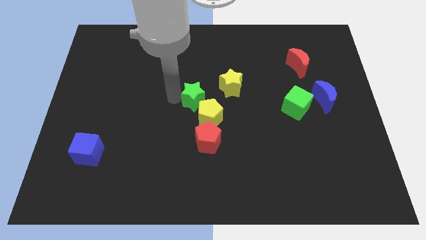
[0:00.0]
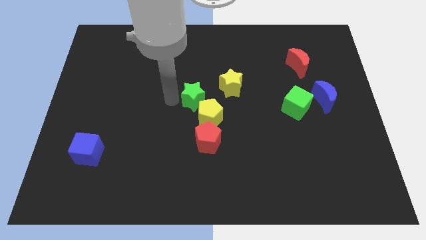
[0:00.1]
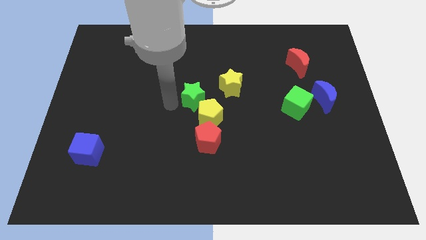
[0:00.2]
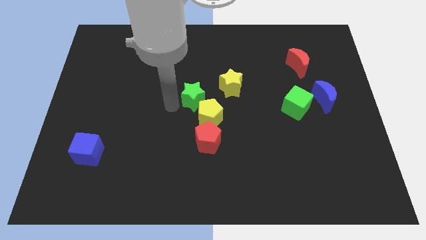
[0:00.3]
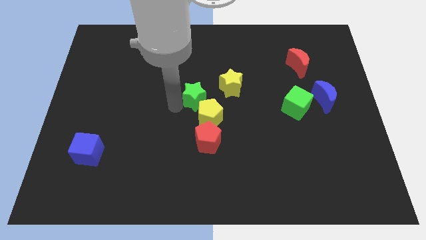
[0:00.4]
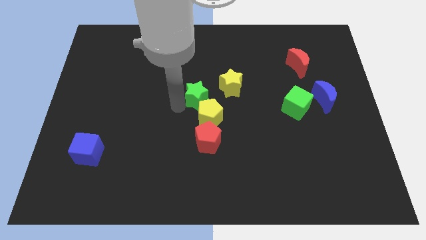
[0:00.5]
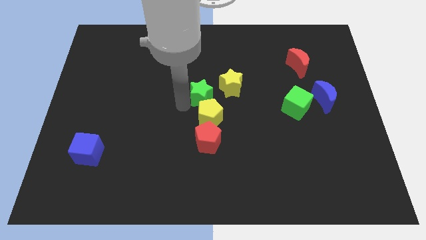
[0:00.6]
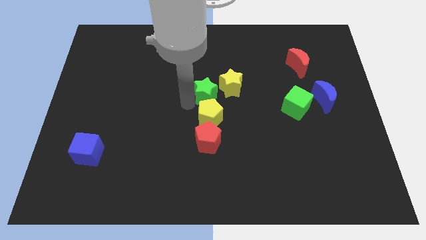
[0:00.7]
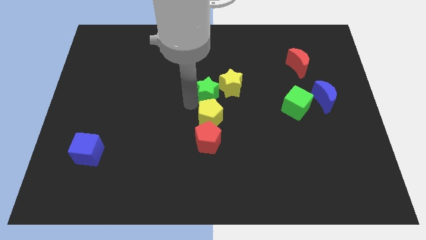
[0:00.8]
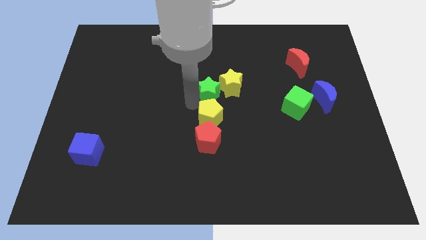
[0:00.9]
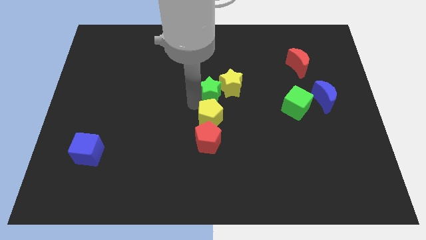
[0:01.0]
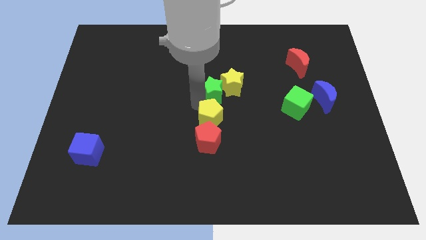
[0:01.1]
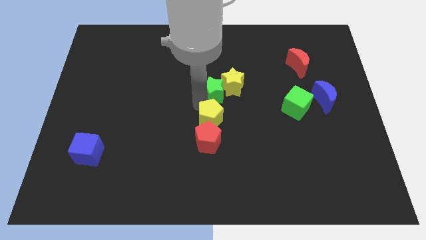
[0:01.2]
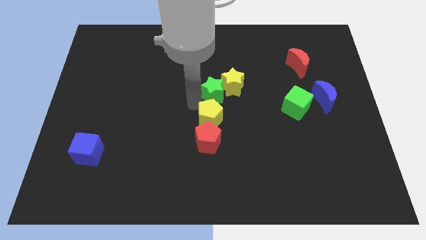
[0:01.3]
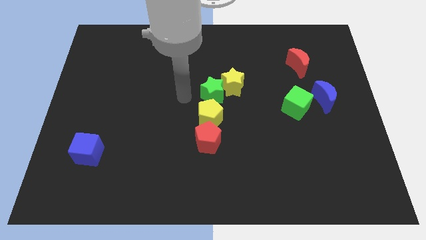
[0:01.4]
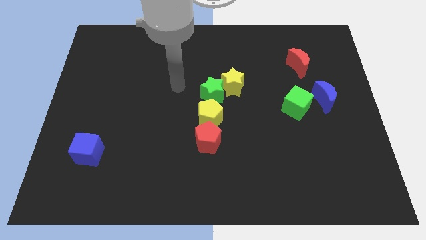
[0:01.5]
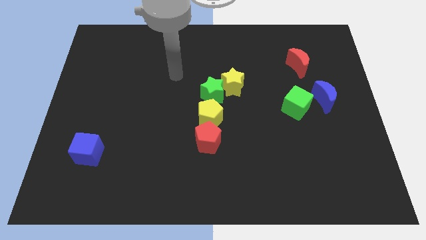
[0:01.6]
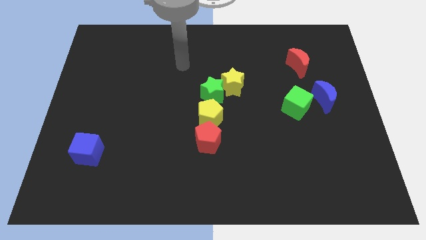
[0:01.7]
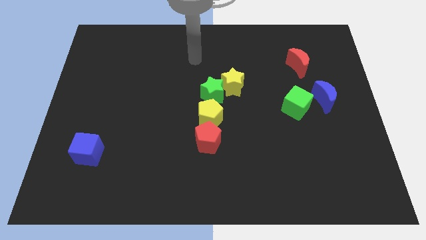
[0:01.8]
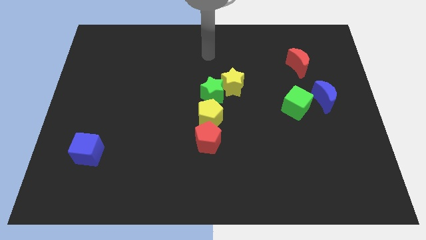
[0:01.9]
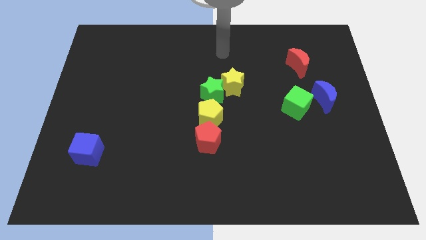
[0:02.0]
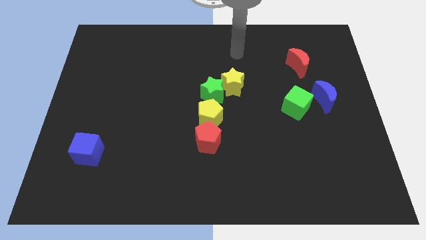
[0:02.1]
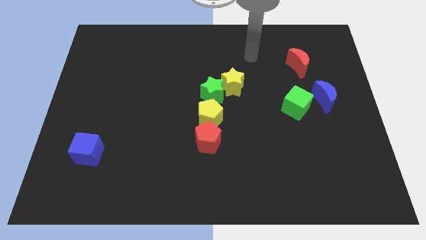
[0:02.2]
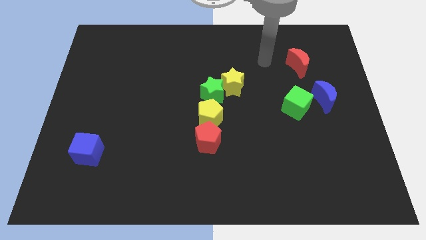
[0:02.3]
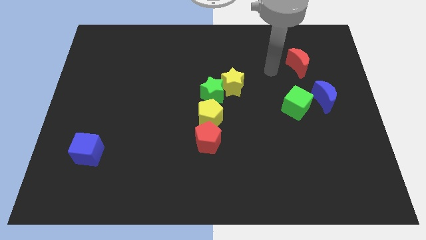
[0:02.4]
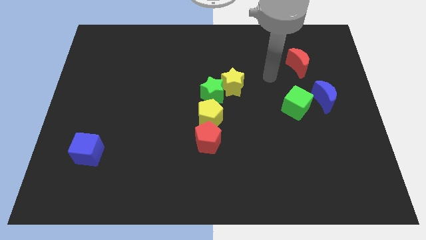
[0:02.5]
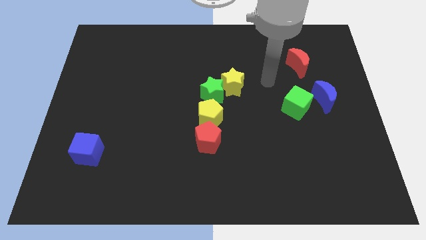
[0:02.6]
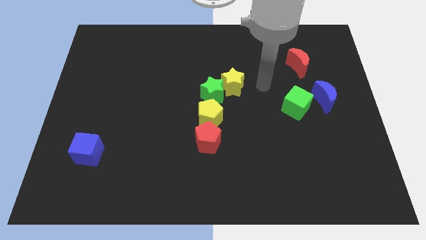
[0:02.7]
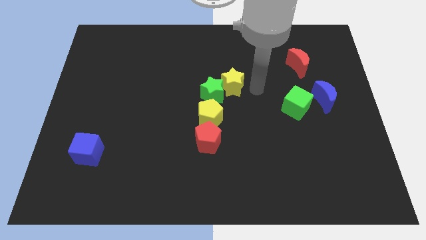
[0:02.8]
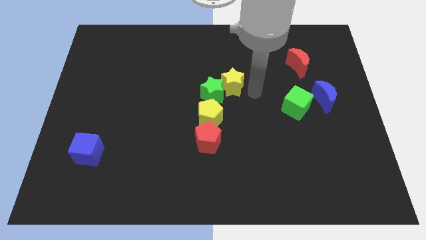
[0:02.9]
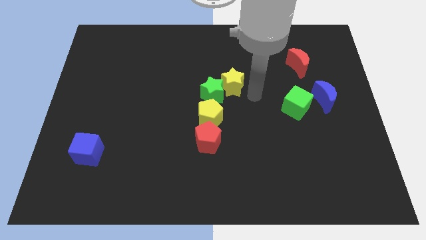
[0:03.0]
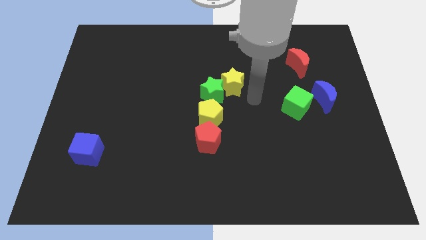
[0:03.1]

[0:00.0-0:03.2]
move green star between yellow star and yellow pentagon

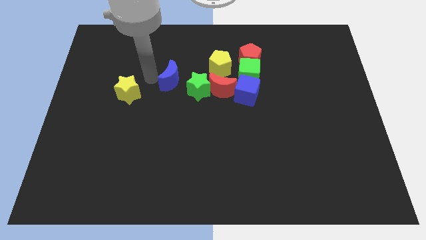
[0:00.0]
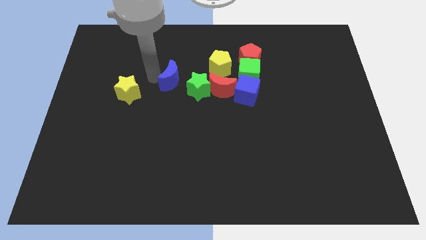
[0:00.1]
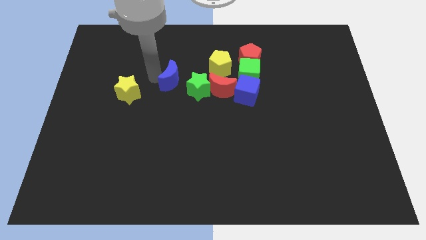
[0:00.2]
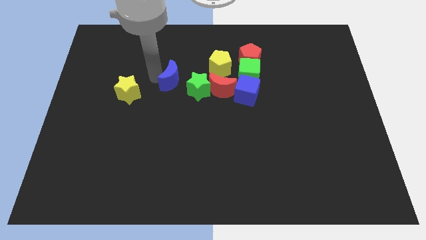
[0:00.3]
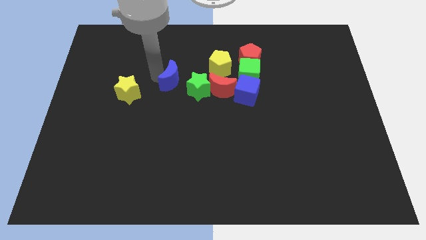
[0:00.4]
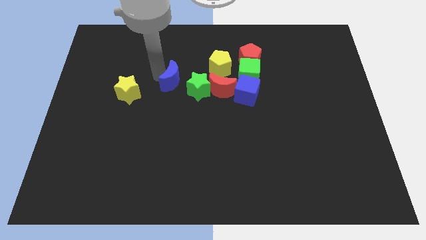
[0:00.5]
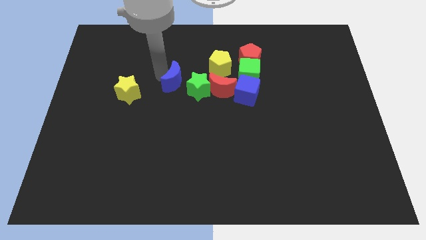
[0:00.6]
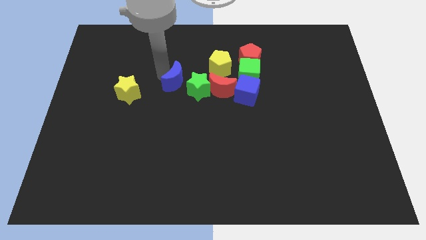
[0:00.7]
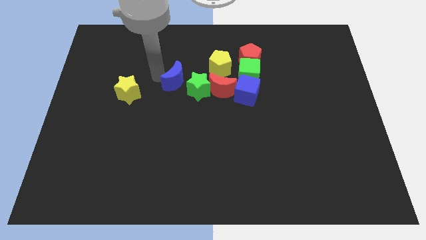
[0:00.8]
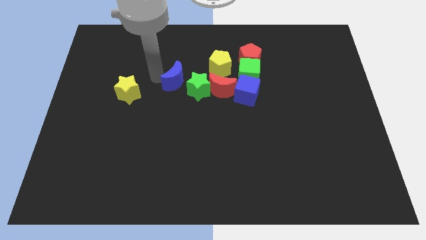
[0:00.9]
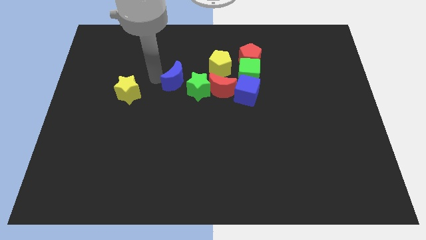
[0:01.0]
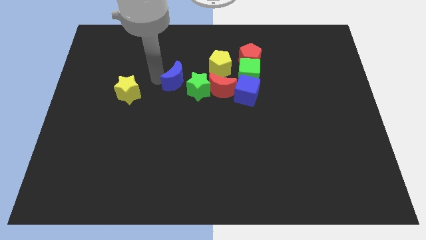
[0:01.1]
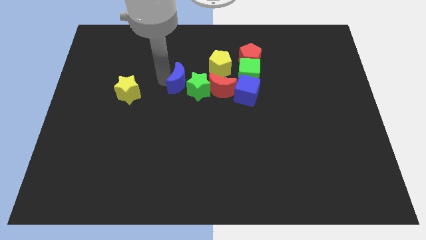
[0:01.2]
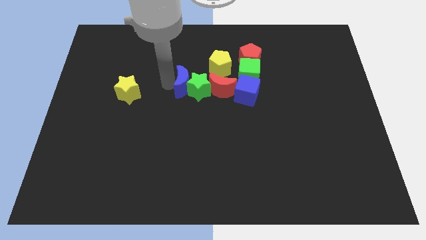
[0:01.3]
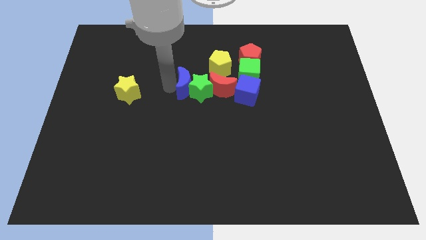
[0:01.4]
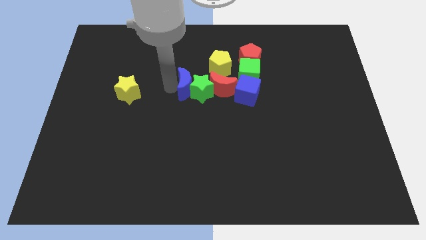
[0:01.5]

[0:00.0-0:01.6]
push the blue moon into the green star

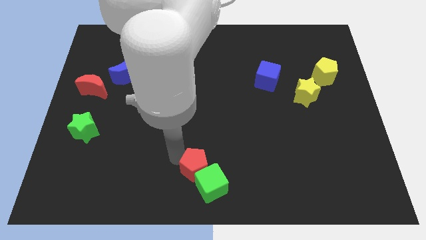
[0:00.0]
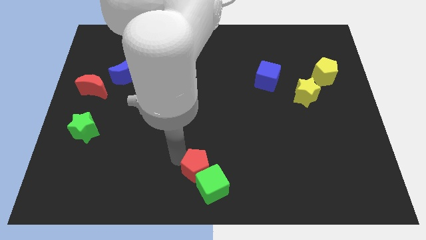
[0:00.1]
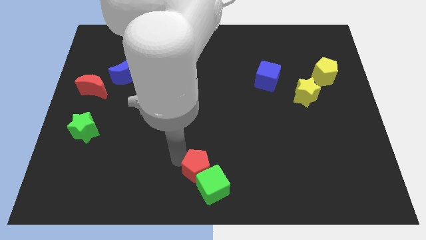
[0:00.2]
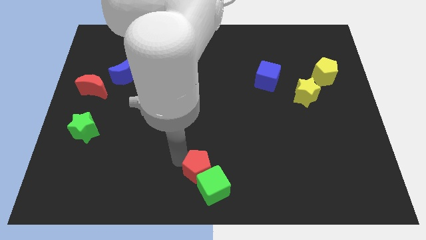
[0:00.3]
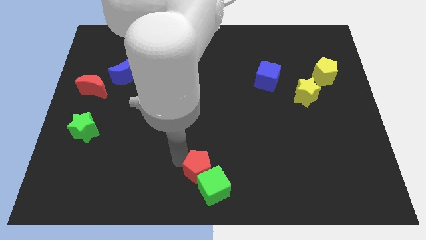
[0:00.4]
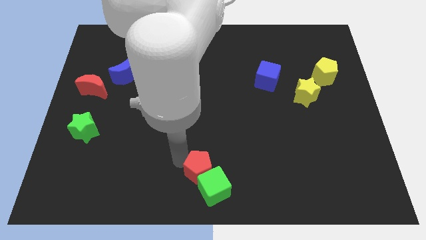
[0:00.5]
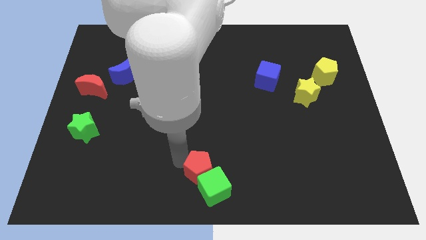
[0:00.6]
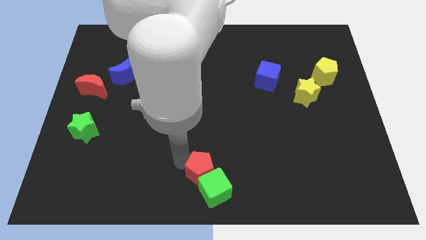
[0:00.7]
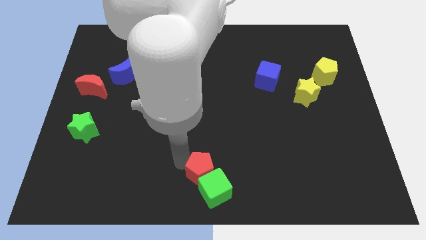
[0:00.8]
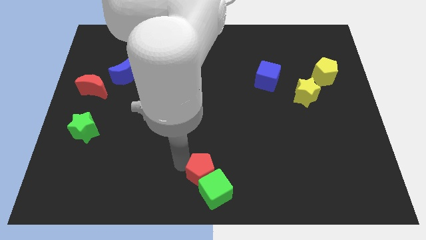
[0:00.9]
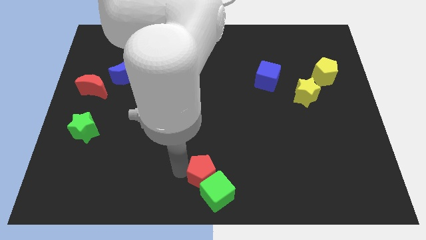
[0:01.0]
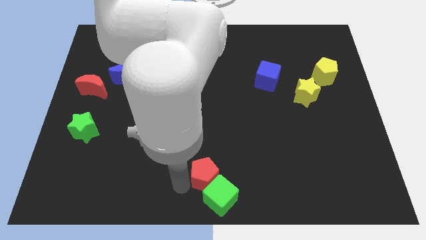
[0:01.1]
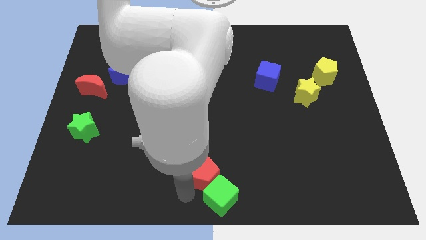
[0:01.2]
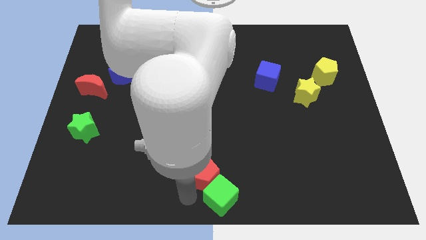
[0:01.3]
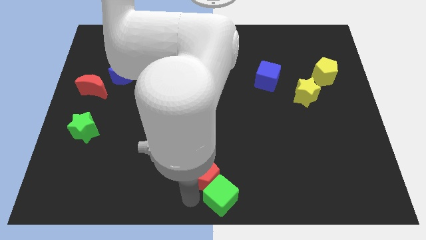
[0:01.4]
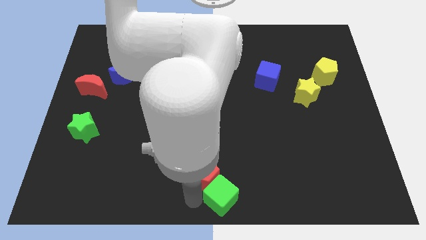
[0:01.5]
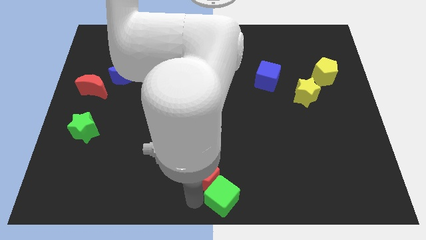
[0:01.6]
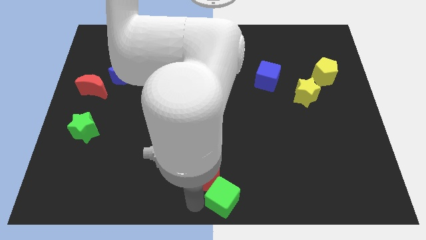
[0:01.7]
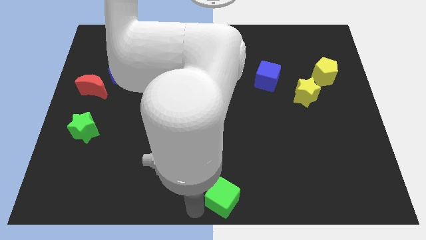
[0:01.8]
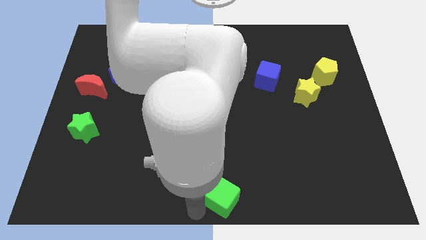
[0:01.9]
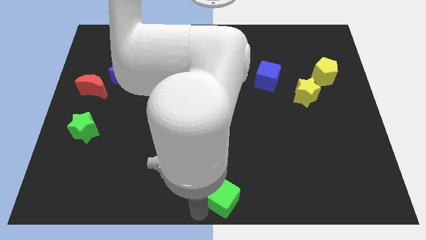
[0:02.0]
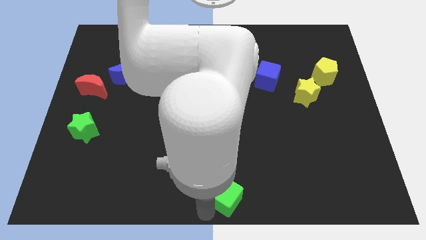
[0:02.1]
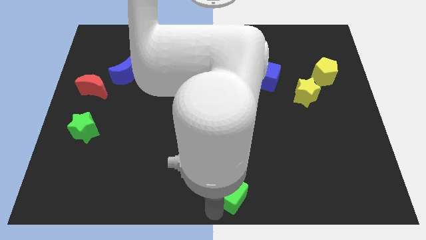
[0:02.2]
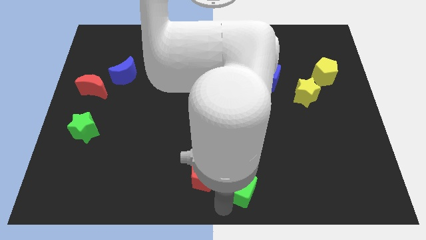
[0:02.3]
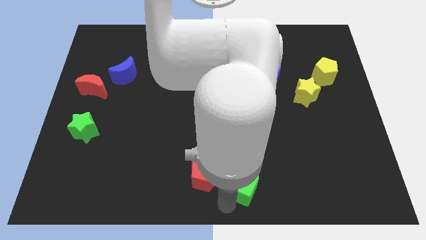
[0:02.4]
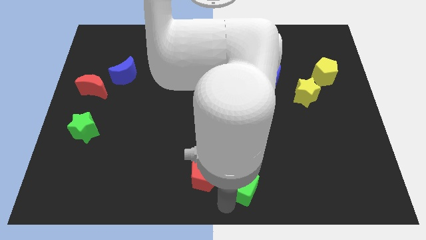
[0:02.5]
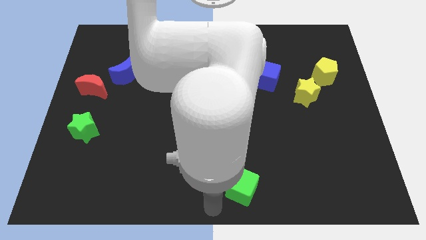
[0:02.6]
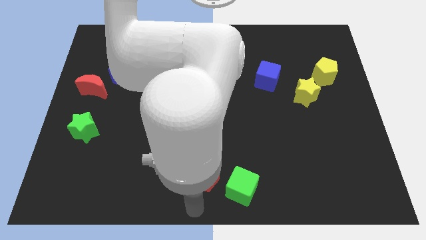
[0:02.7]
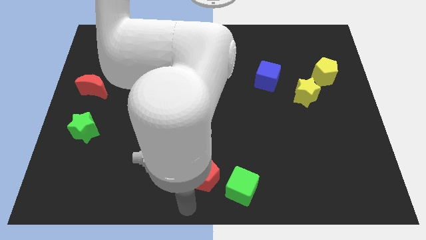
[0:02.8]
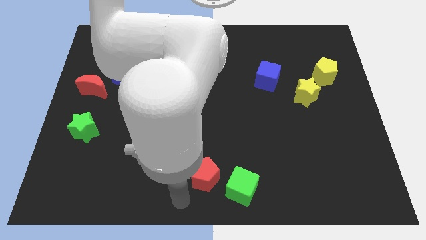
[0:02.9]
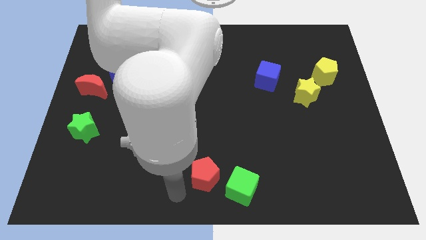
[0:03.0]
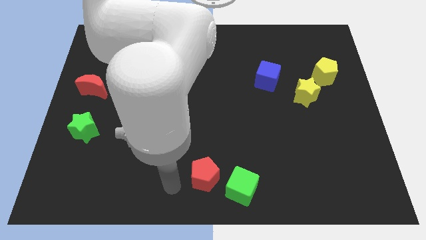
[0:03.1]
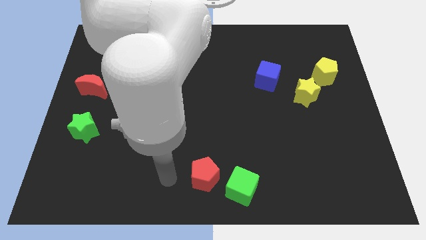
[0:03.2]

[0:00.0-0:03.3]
move the green cube to the bottom of the board with red pentagon

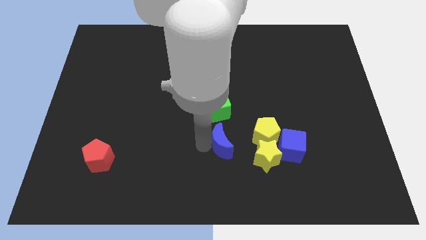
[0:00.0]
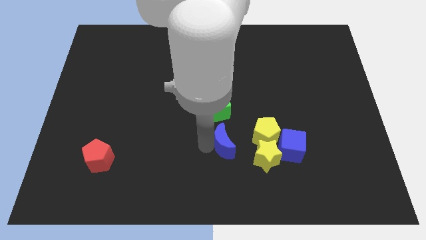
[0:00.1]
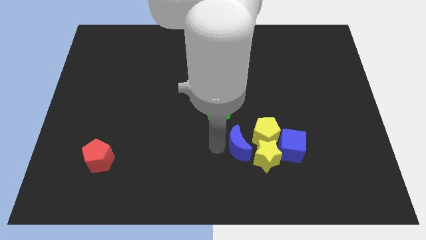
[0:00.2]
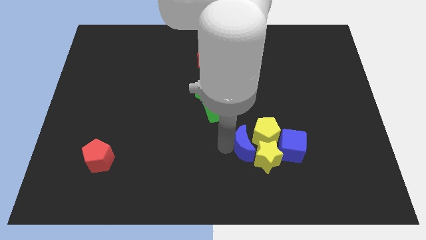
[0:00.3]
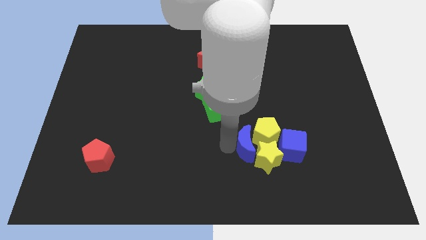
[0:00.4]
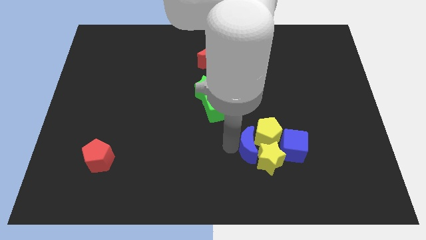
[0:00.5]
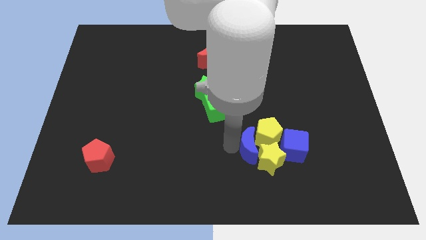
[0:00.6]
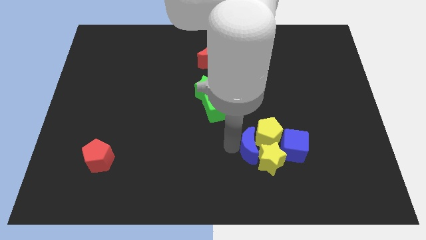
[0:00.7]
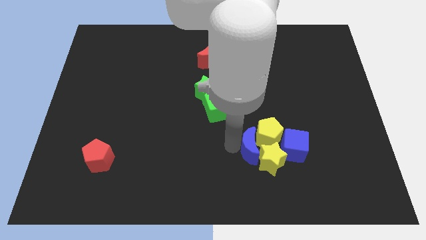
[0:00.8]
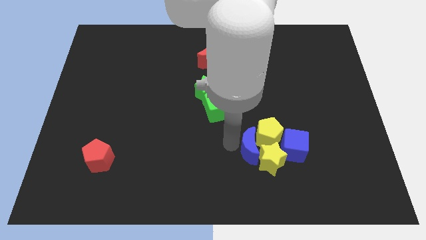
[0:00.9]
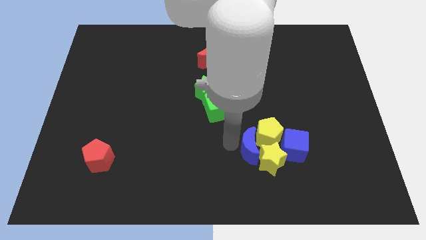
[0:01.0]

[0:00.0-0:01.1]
push the blue moon into group of blocks
